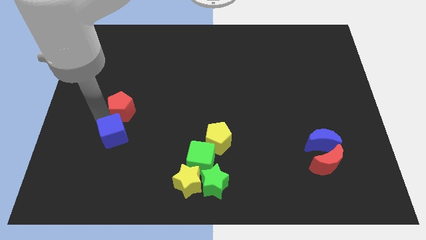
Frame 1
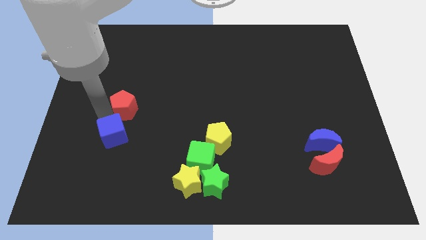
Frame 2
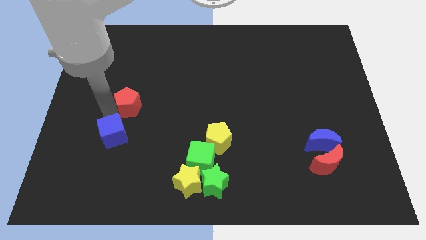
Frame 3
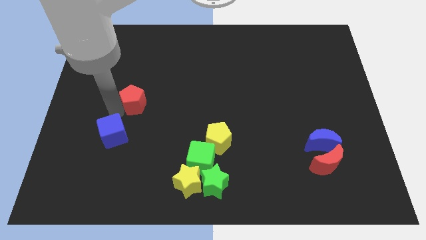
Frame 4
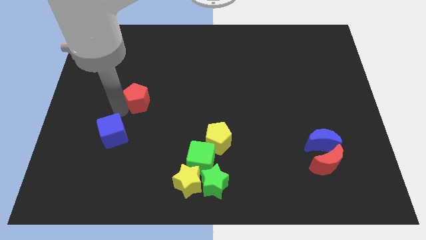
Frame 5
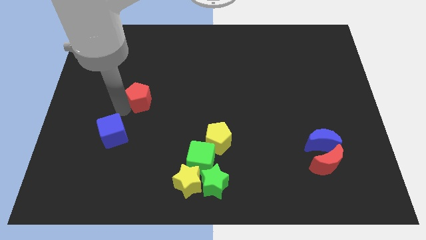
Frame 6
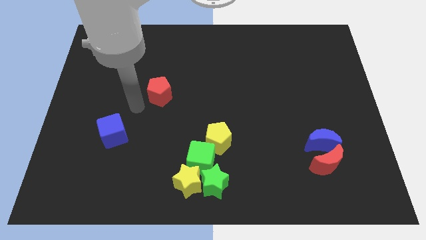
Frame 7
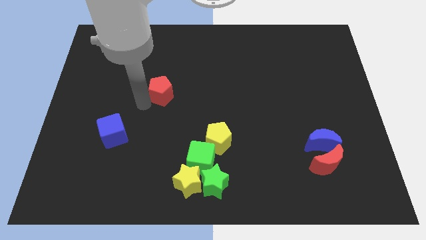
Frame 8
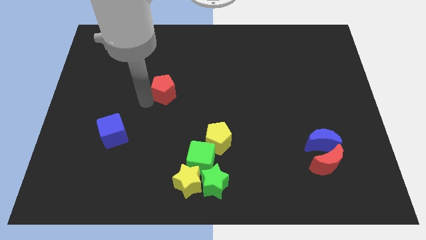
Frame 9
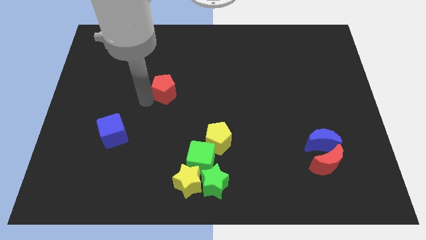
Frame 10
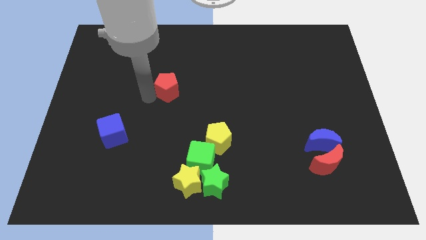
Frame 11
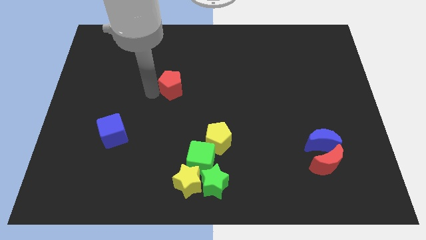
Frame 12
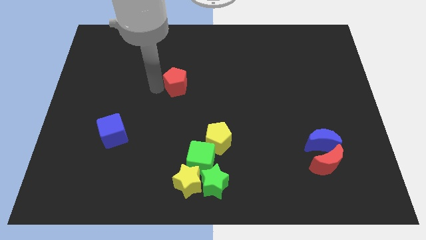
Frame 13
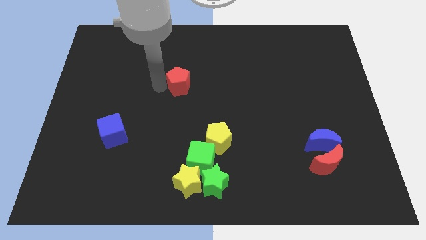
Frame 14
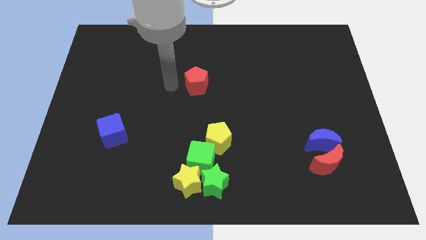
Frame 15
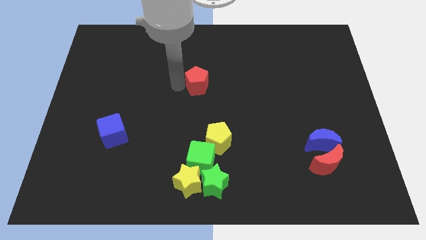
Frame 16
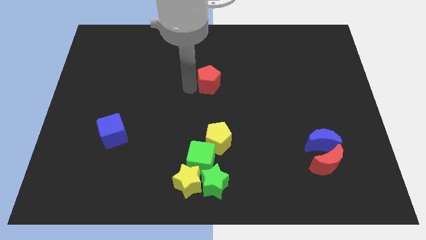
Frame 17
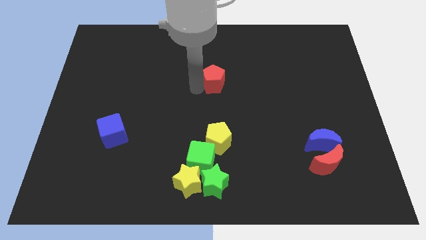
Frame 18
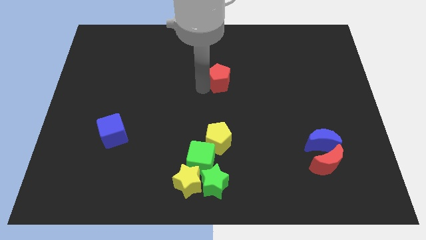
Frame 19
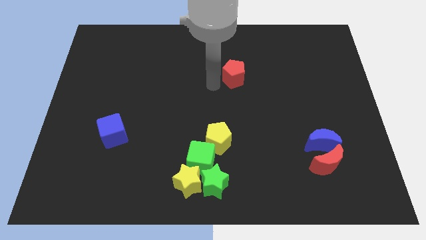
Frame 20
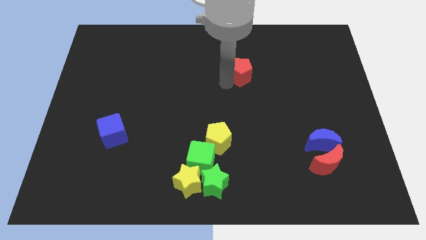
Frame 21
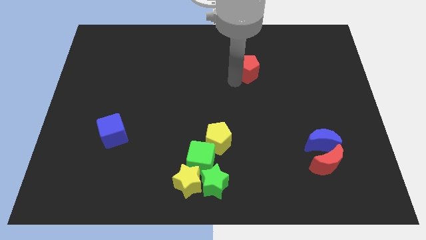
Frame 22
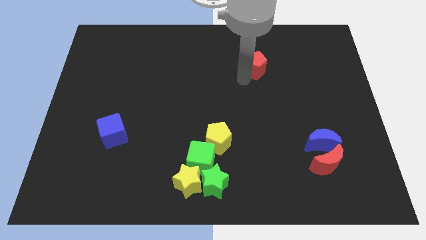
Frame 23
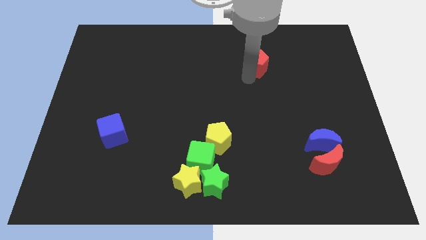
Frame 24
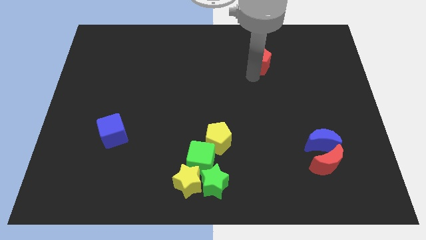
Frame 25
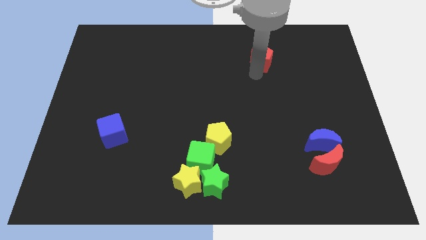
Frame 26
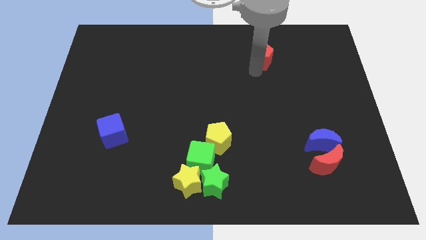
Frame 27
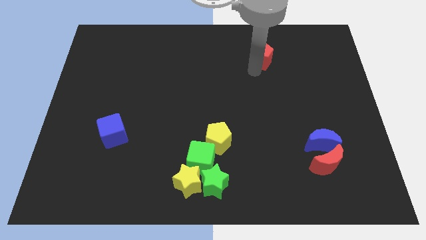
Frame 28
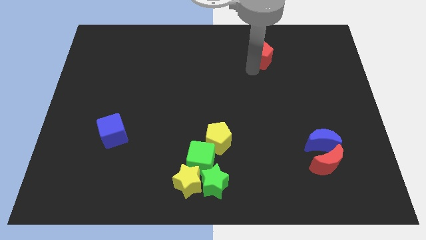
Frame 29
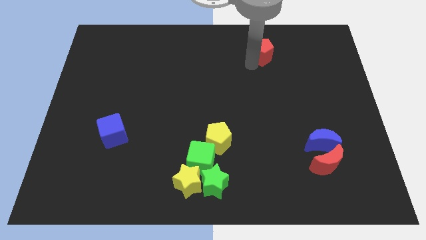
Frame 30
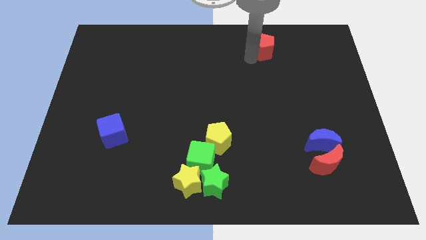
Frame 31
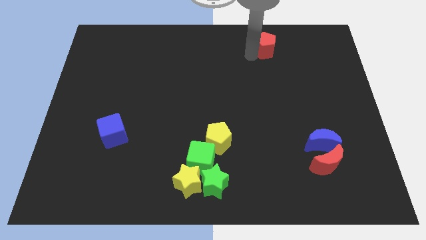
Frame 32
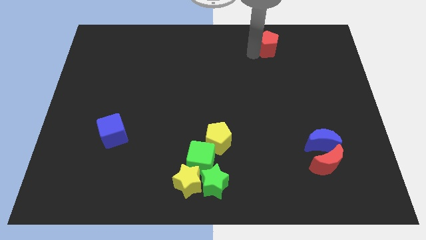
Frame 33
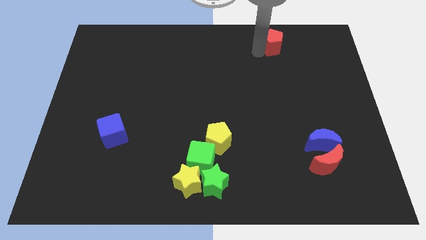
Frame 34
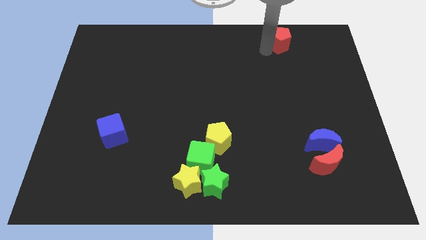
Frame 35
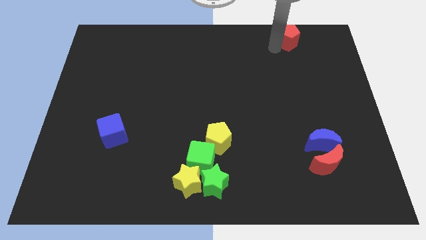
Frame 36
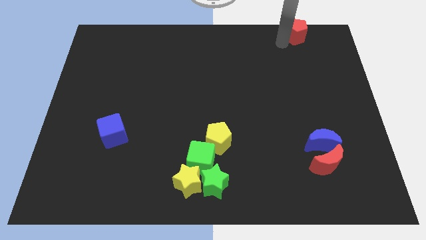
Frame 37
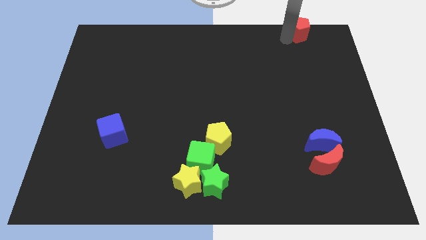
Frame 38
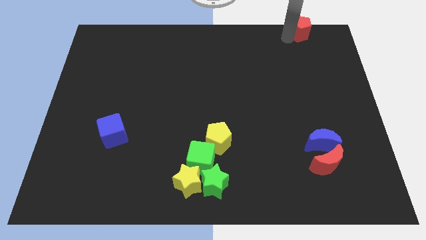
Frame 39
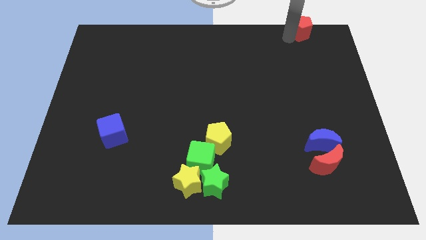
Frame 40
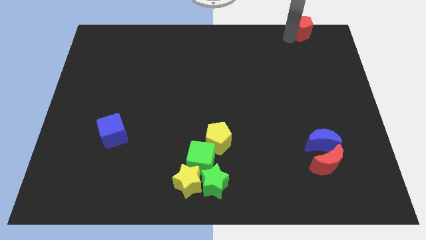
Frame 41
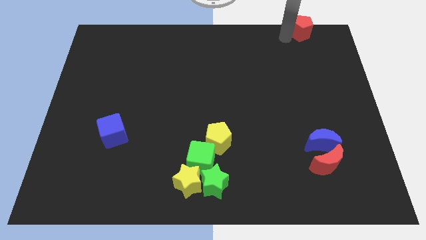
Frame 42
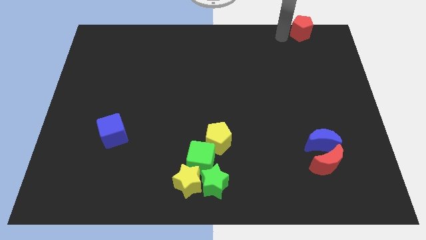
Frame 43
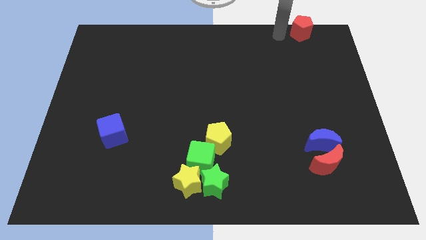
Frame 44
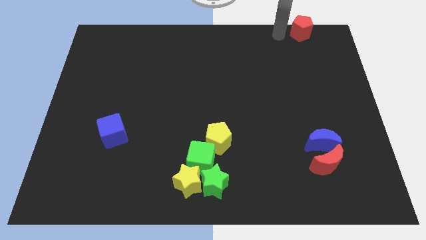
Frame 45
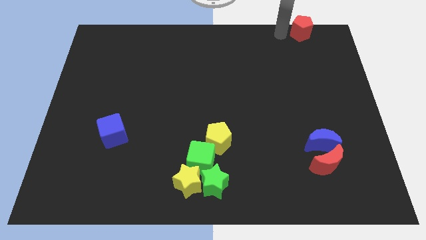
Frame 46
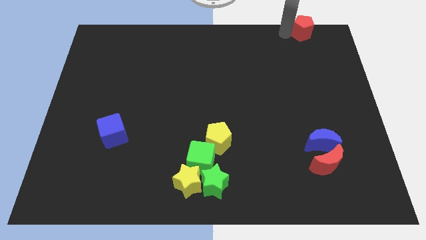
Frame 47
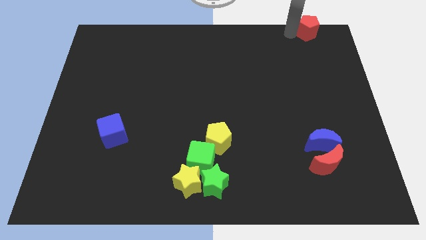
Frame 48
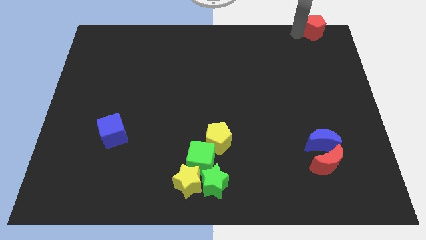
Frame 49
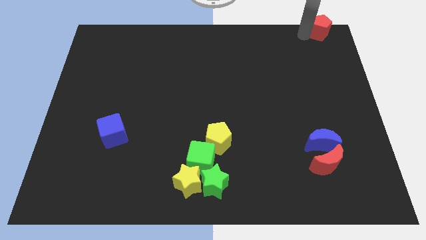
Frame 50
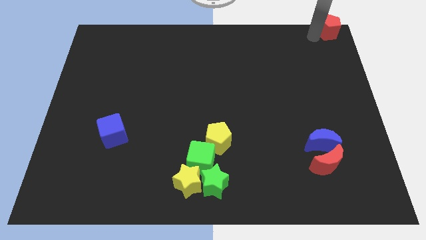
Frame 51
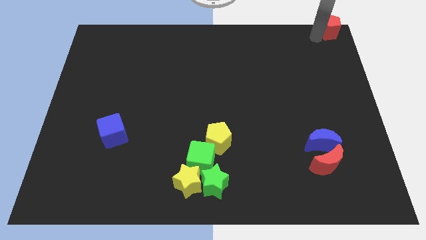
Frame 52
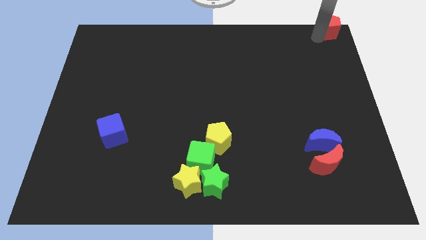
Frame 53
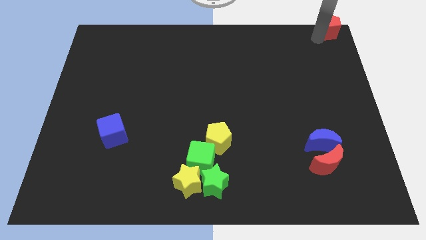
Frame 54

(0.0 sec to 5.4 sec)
place the red pentagon at the top right corner of the board

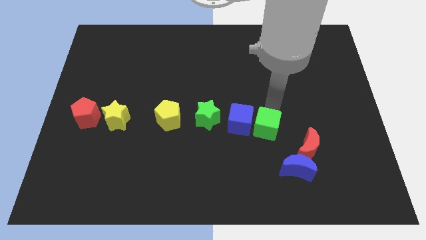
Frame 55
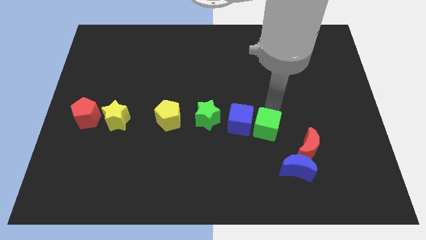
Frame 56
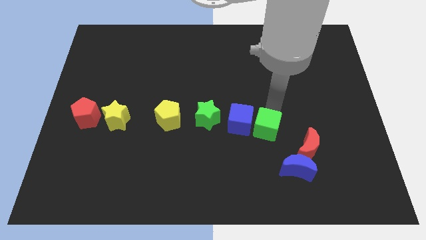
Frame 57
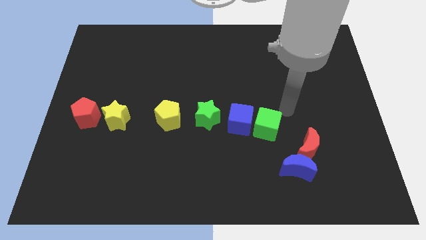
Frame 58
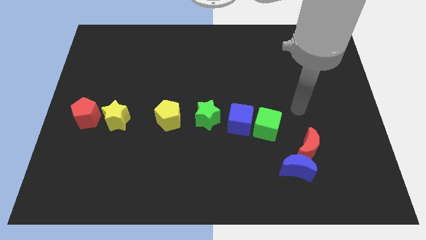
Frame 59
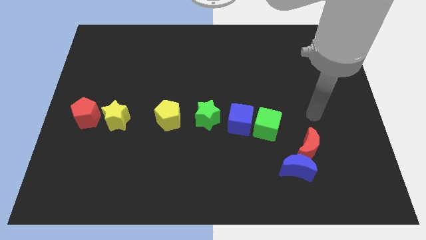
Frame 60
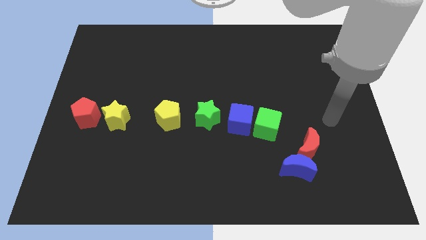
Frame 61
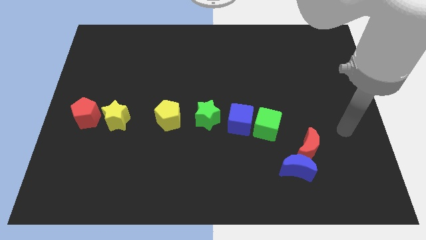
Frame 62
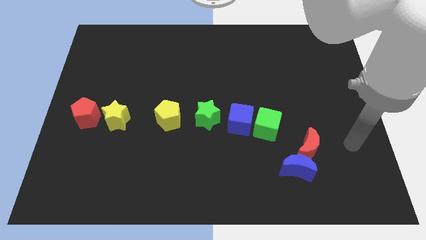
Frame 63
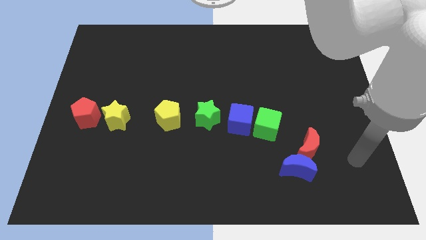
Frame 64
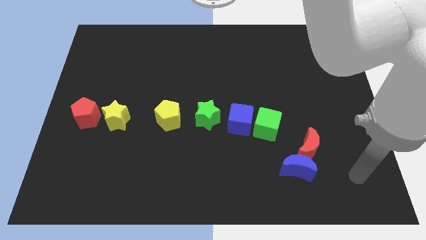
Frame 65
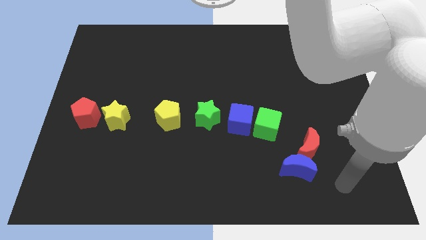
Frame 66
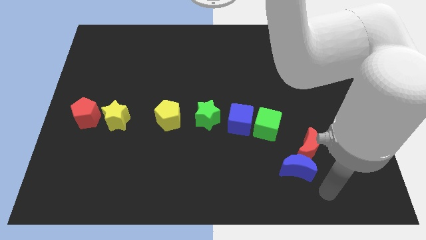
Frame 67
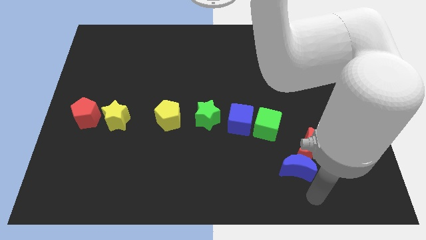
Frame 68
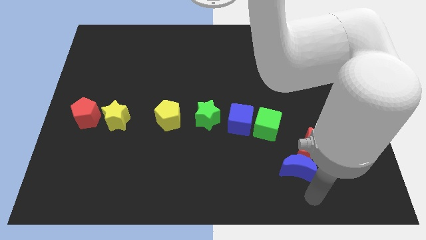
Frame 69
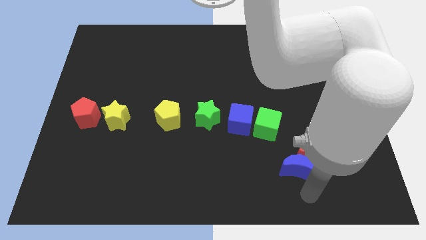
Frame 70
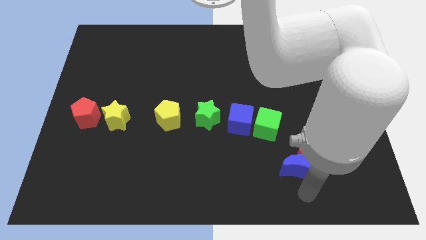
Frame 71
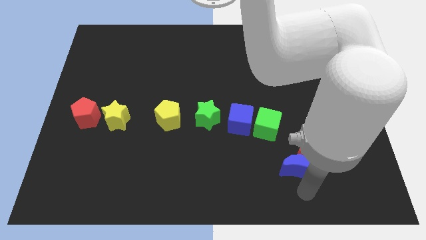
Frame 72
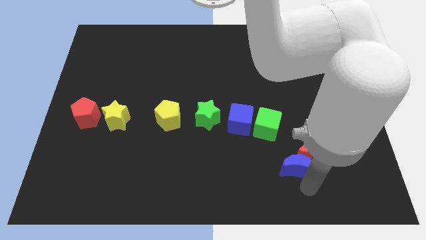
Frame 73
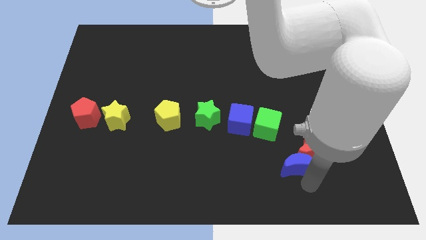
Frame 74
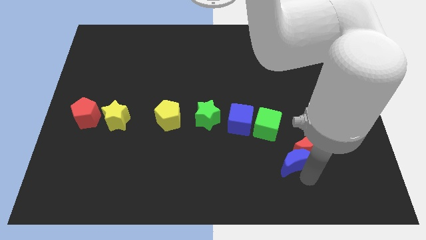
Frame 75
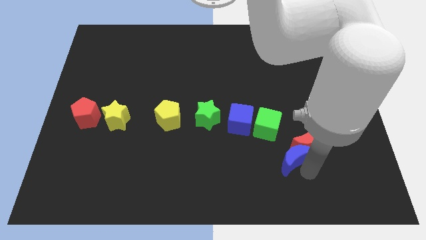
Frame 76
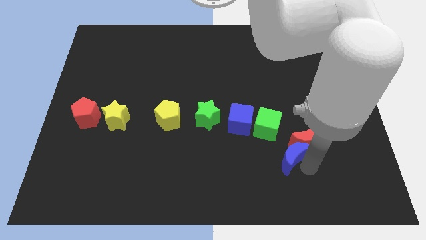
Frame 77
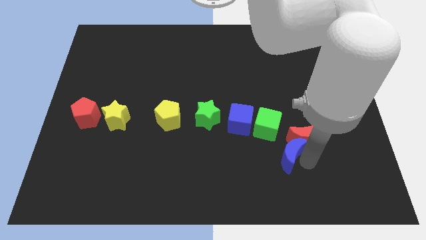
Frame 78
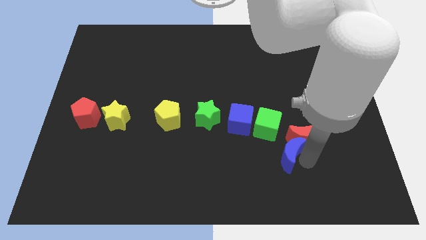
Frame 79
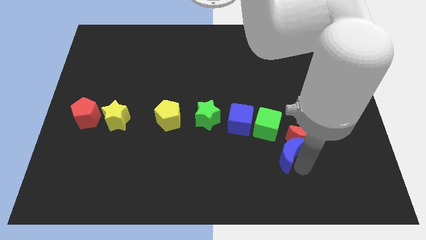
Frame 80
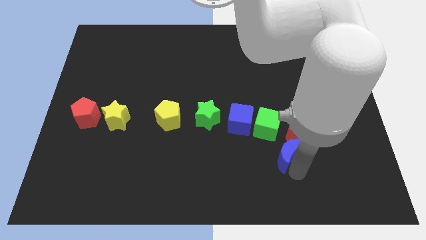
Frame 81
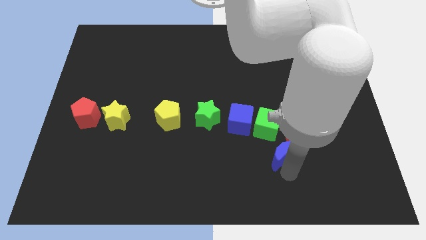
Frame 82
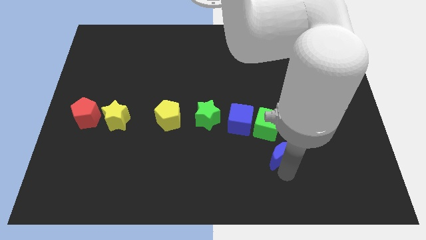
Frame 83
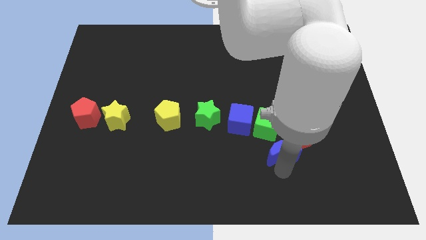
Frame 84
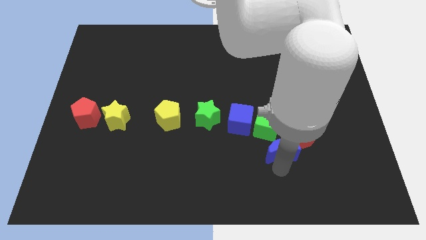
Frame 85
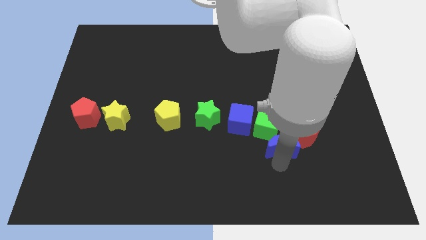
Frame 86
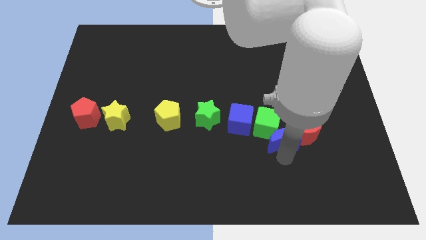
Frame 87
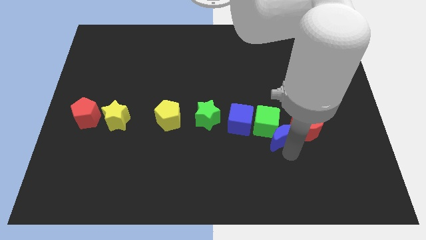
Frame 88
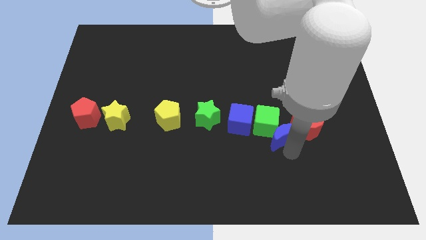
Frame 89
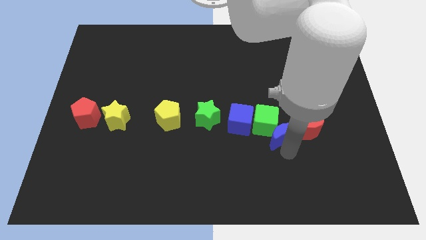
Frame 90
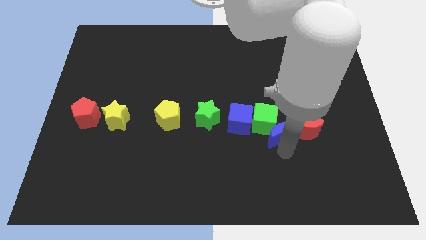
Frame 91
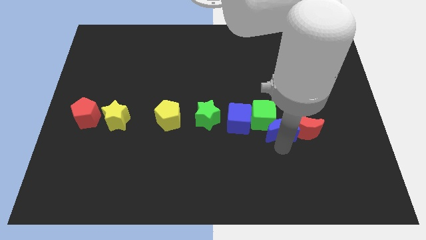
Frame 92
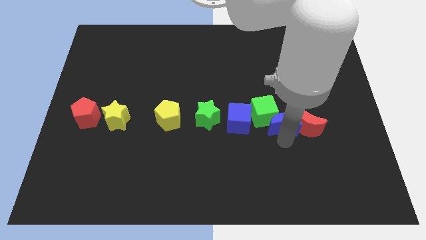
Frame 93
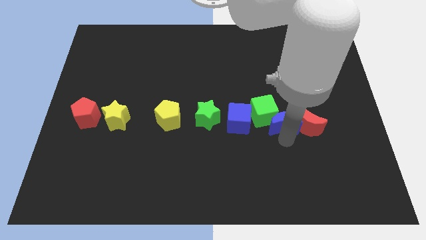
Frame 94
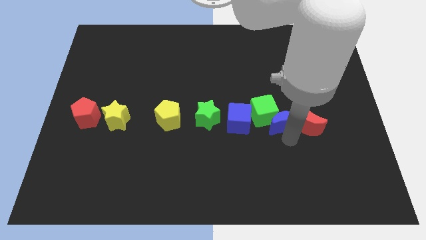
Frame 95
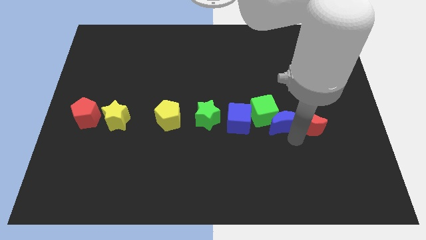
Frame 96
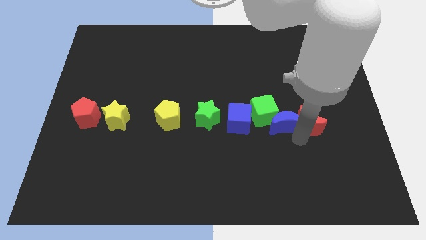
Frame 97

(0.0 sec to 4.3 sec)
push blue crescent in to green cube
